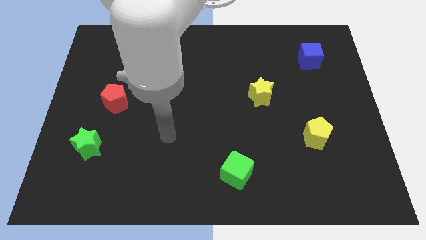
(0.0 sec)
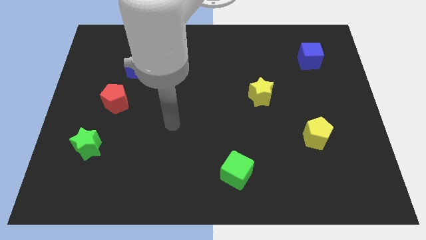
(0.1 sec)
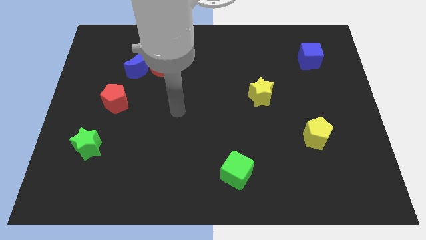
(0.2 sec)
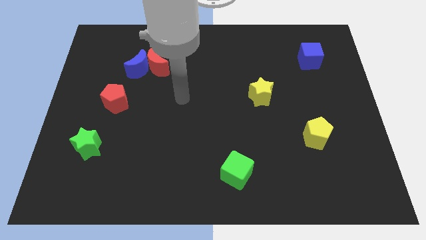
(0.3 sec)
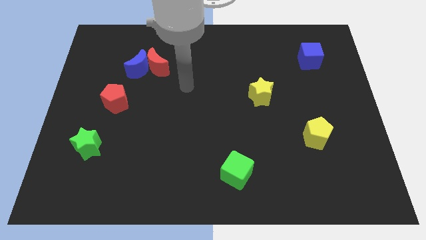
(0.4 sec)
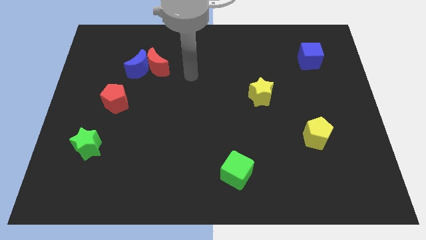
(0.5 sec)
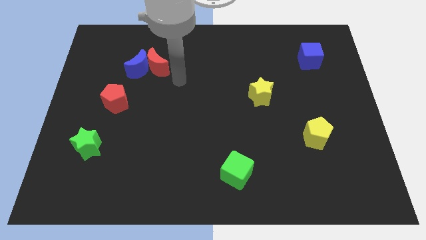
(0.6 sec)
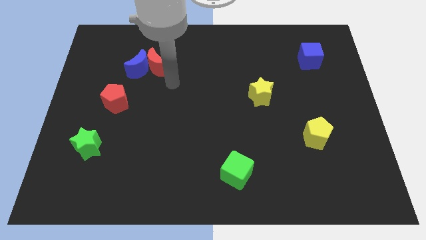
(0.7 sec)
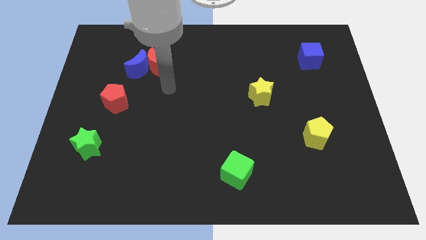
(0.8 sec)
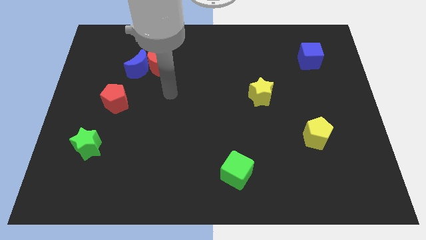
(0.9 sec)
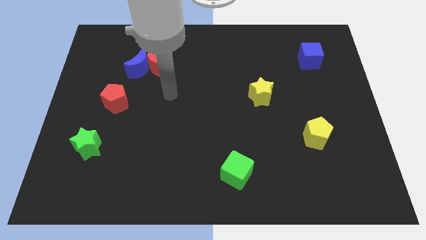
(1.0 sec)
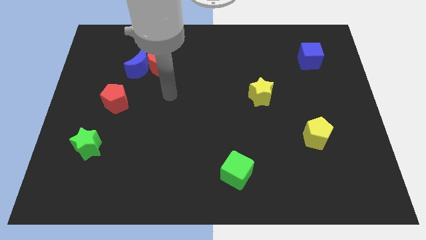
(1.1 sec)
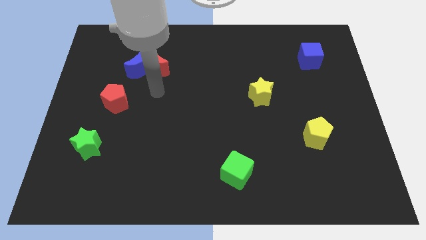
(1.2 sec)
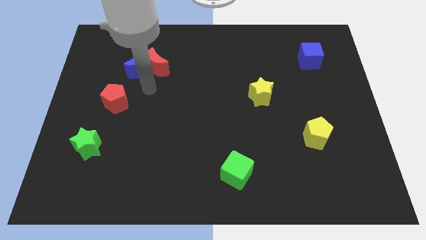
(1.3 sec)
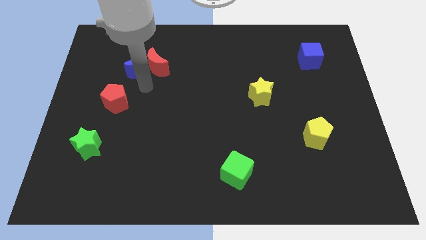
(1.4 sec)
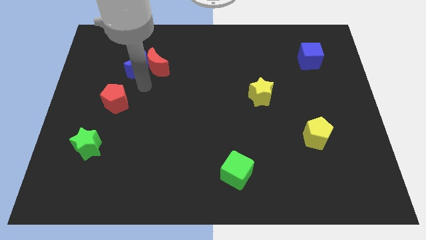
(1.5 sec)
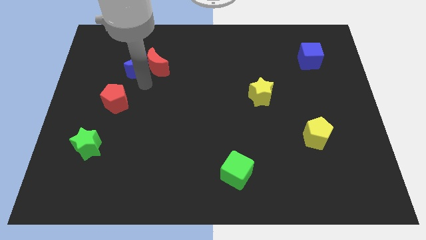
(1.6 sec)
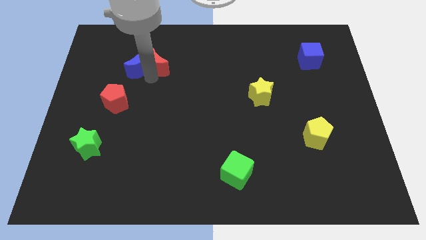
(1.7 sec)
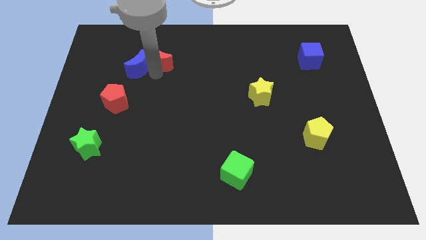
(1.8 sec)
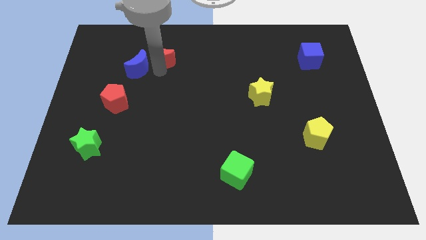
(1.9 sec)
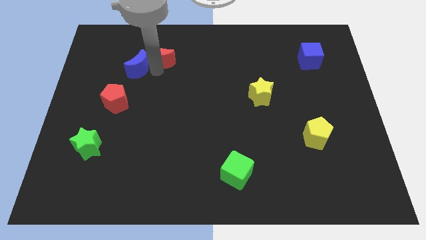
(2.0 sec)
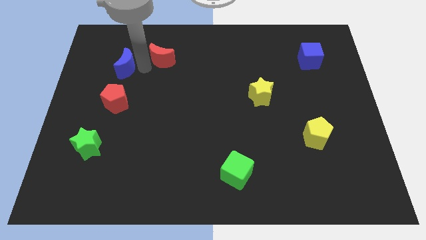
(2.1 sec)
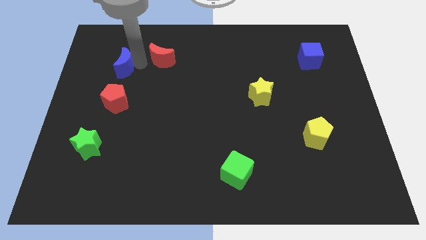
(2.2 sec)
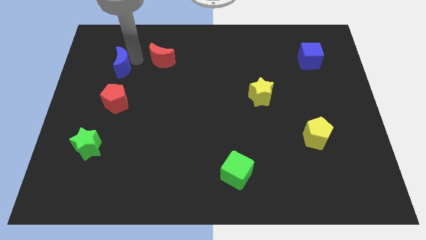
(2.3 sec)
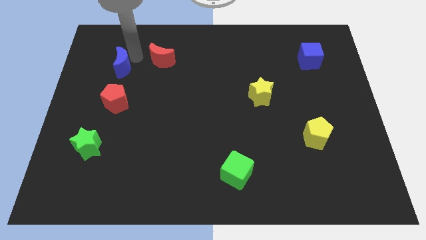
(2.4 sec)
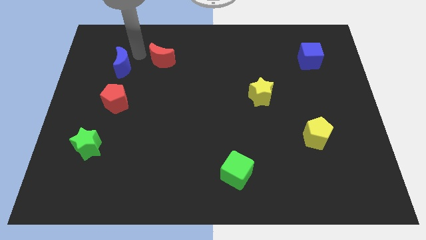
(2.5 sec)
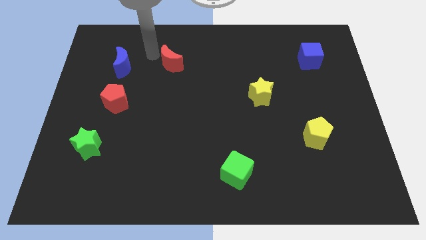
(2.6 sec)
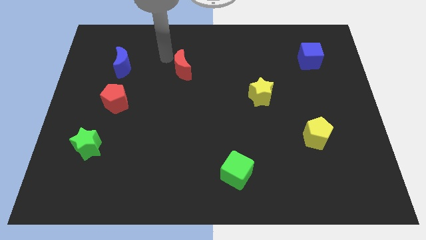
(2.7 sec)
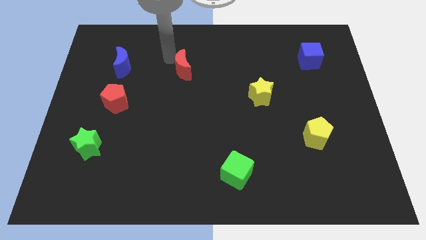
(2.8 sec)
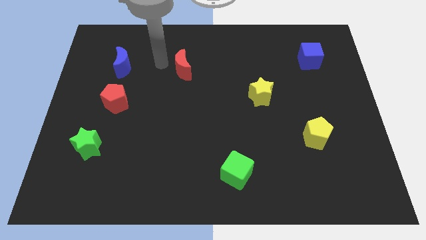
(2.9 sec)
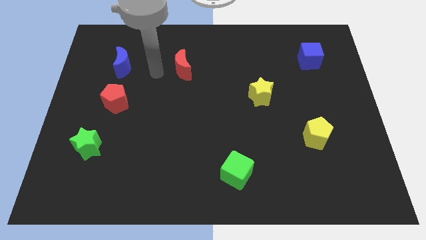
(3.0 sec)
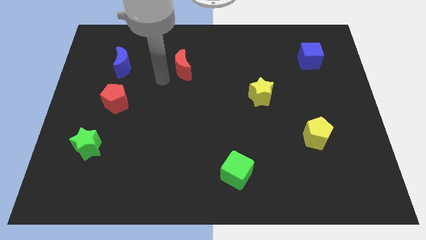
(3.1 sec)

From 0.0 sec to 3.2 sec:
separate the blue semicircle and red moon

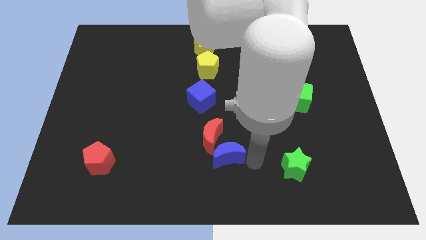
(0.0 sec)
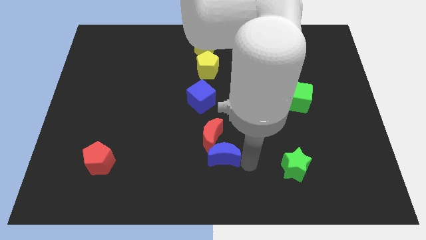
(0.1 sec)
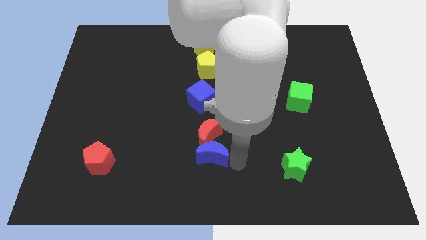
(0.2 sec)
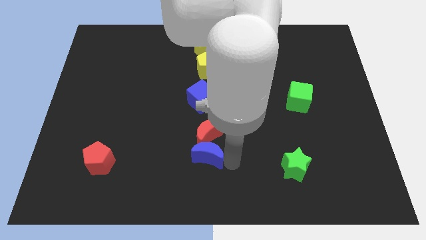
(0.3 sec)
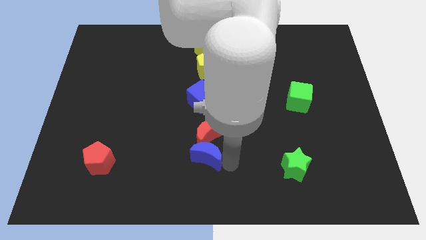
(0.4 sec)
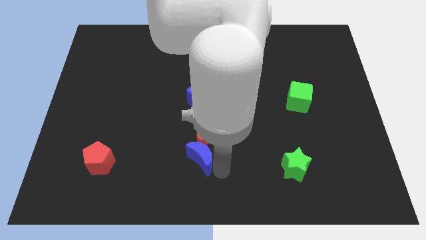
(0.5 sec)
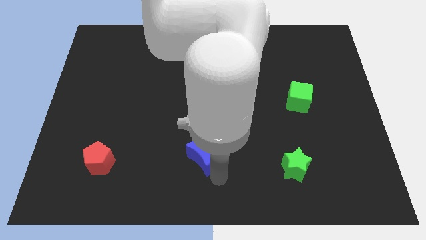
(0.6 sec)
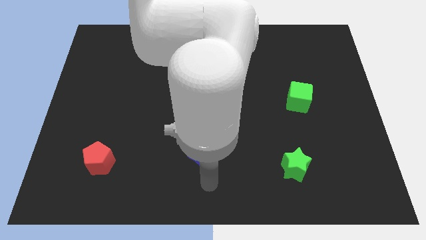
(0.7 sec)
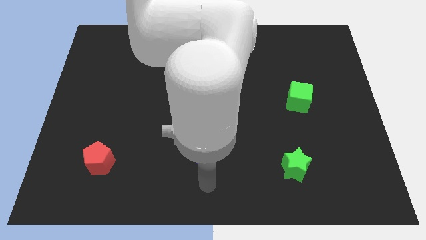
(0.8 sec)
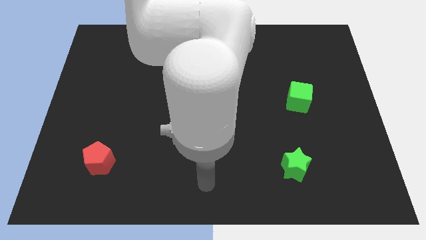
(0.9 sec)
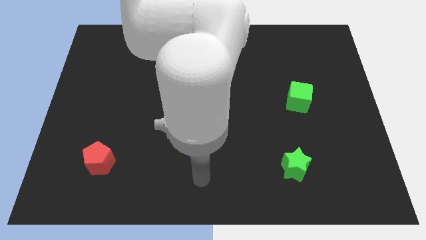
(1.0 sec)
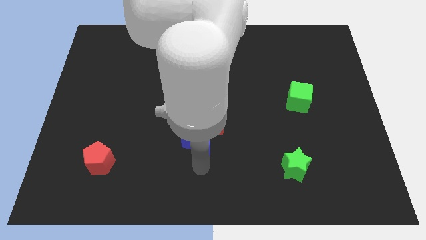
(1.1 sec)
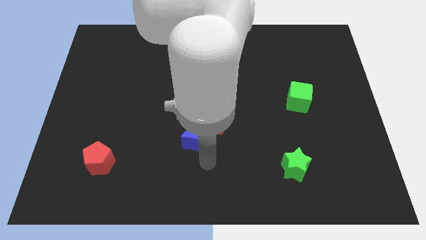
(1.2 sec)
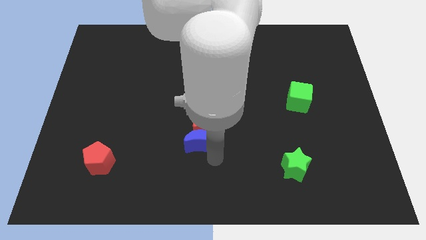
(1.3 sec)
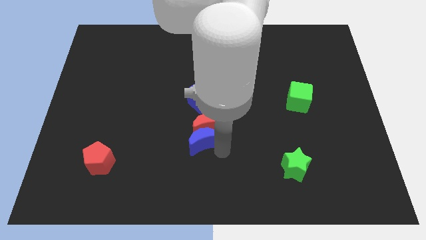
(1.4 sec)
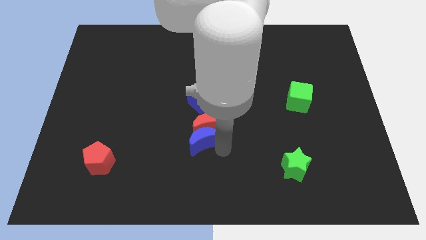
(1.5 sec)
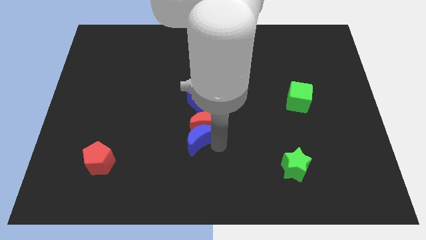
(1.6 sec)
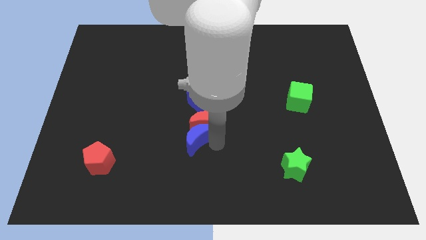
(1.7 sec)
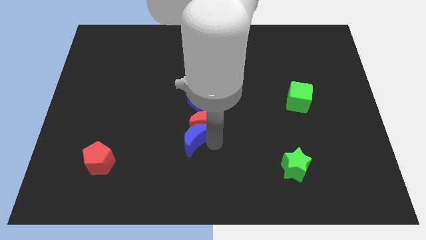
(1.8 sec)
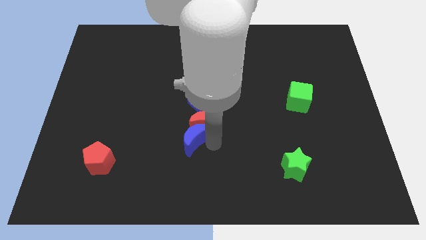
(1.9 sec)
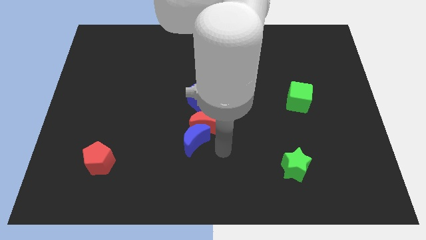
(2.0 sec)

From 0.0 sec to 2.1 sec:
move the blue crescent into the red crescent

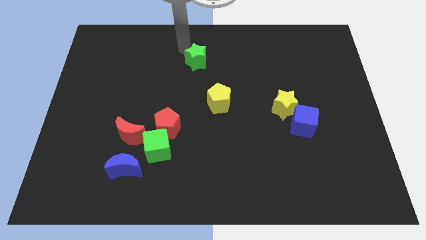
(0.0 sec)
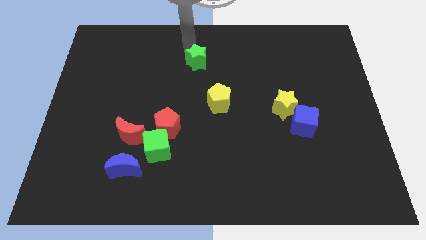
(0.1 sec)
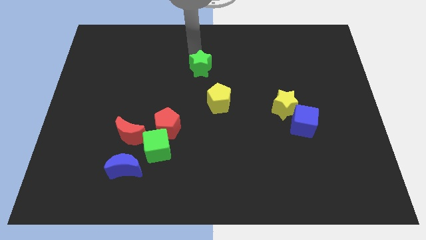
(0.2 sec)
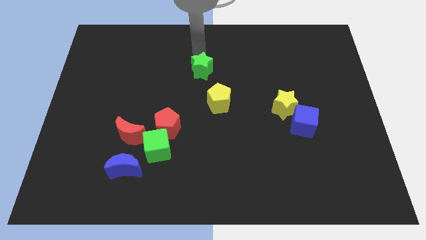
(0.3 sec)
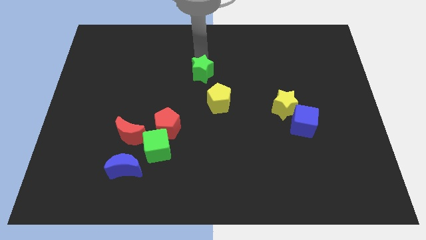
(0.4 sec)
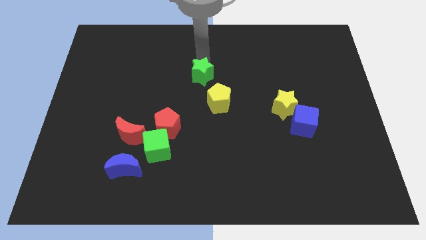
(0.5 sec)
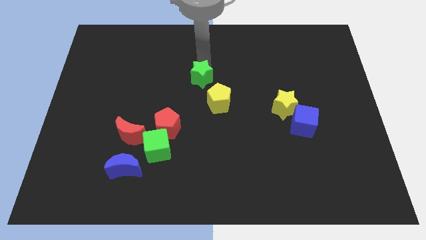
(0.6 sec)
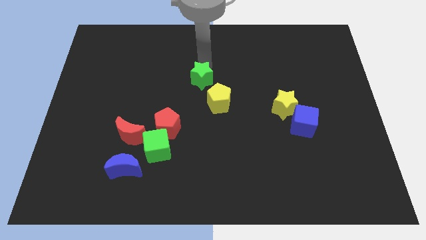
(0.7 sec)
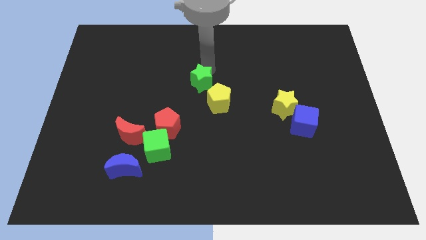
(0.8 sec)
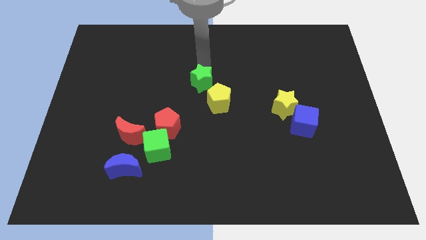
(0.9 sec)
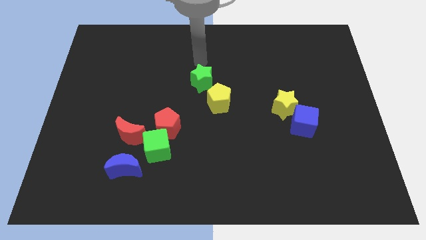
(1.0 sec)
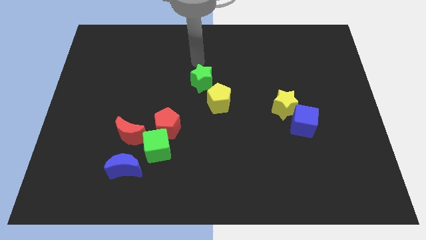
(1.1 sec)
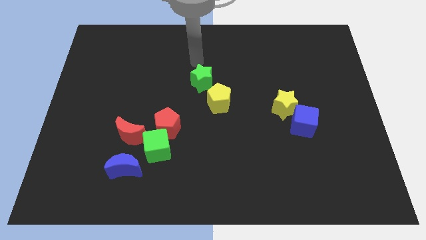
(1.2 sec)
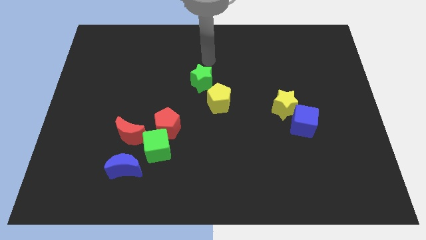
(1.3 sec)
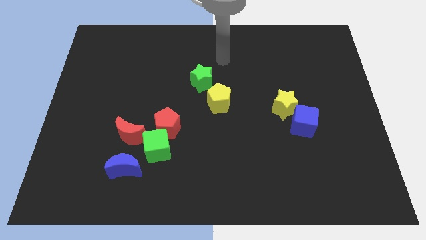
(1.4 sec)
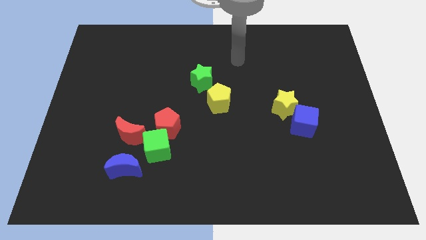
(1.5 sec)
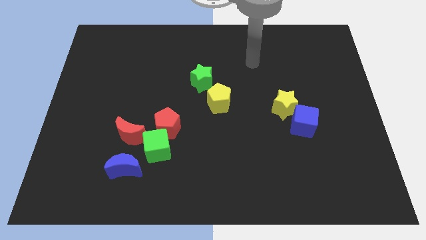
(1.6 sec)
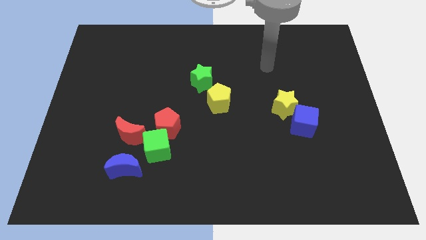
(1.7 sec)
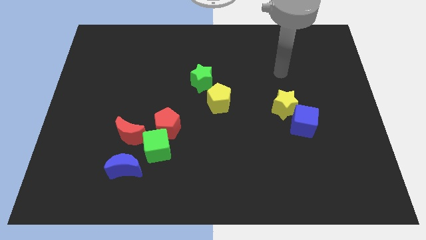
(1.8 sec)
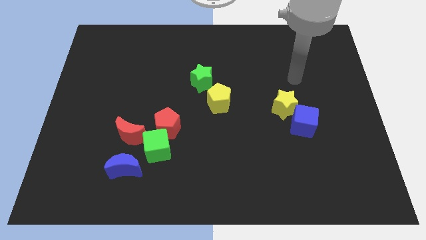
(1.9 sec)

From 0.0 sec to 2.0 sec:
place the green star to the top left of the yellow pentagon

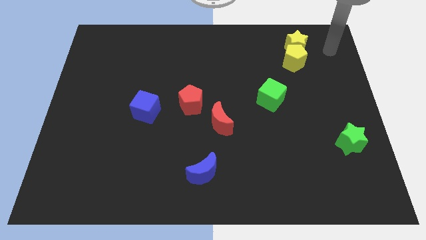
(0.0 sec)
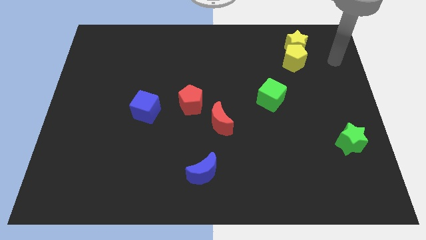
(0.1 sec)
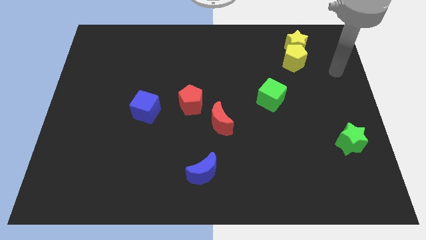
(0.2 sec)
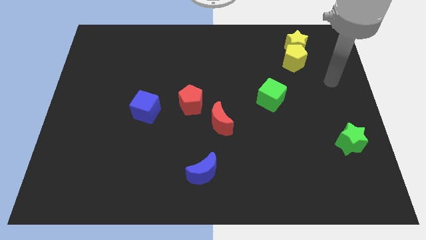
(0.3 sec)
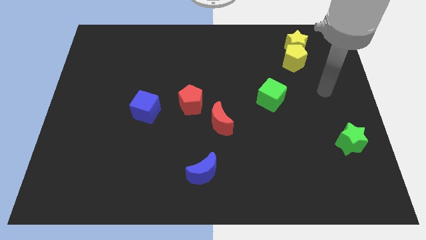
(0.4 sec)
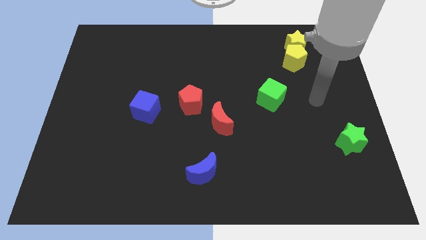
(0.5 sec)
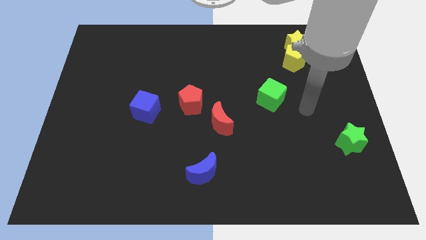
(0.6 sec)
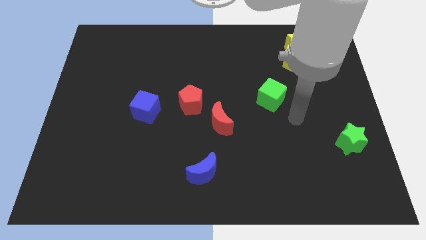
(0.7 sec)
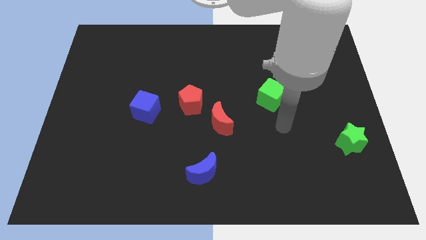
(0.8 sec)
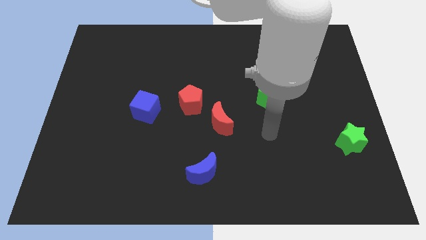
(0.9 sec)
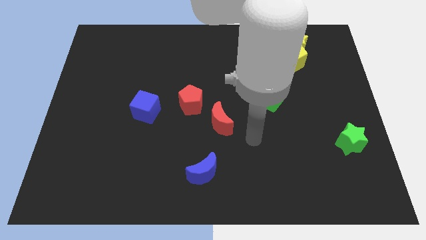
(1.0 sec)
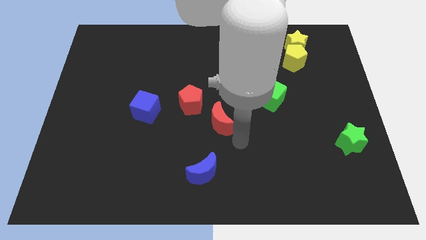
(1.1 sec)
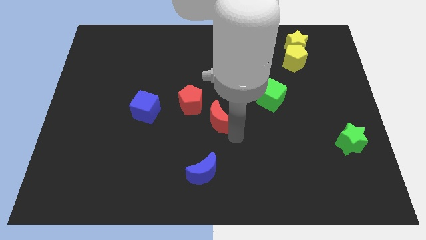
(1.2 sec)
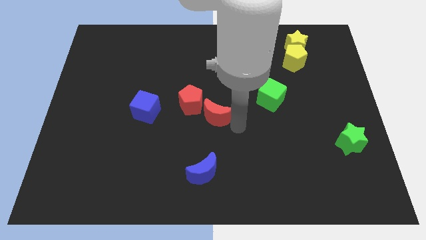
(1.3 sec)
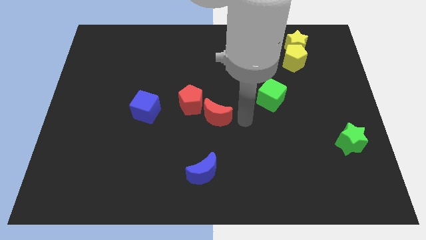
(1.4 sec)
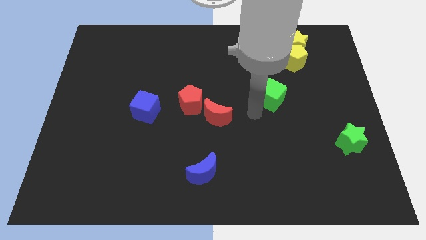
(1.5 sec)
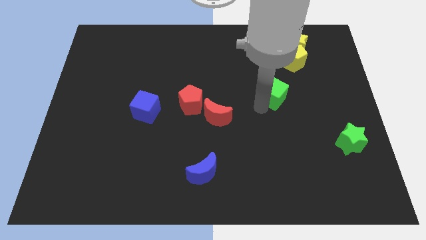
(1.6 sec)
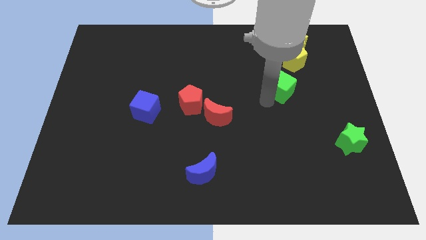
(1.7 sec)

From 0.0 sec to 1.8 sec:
move the green cube towards the yellow pentagon
